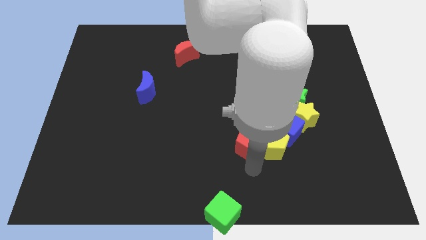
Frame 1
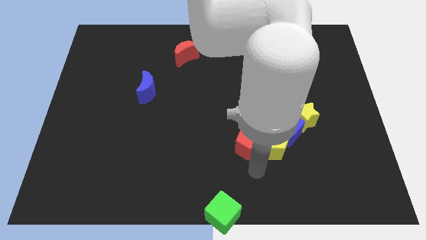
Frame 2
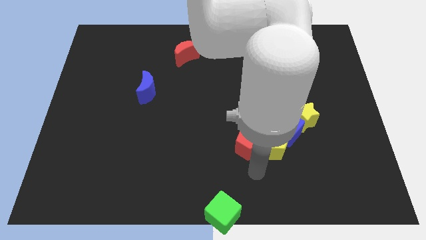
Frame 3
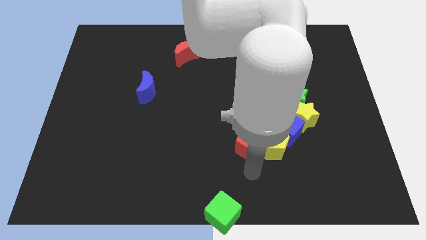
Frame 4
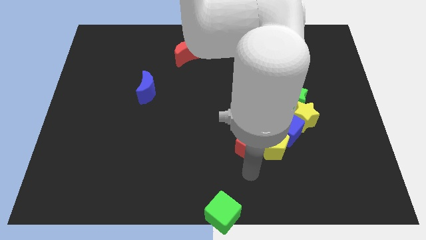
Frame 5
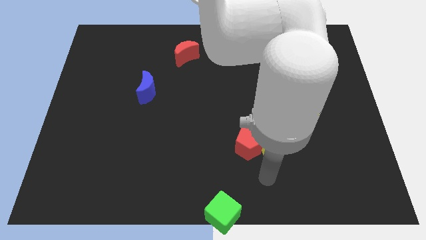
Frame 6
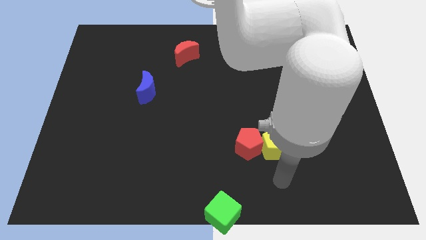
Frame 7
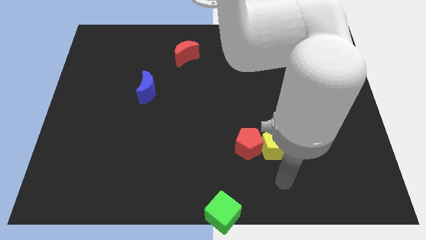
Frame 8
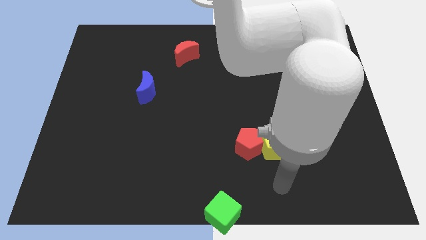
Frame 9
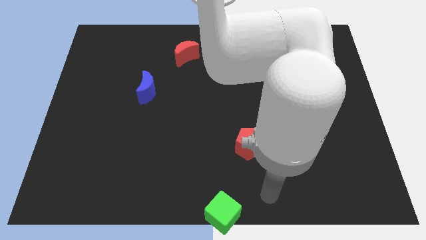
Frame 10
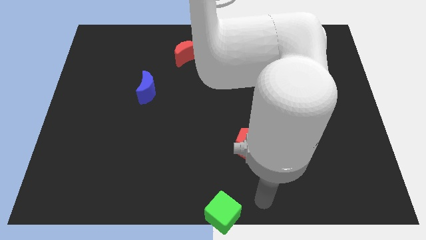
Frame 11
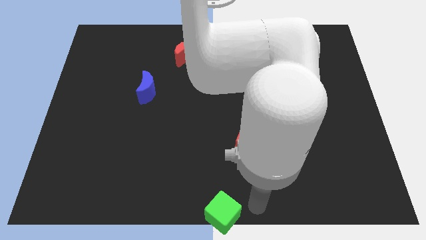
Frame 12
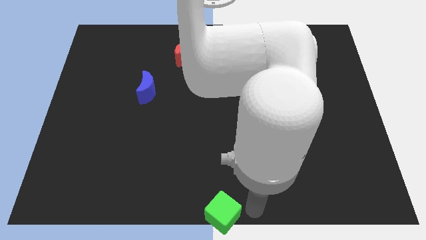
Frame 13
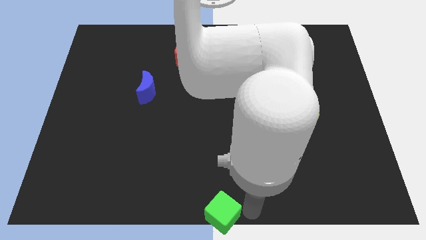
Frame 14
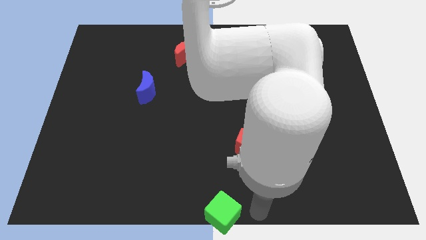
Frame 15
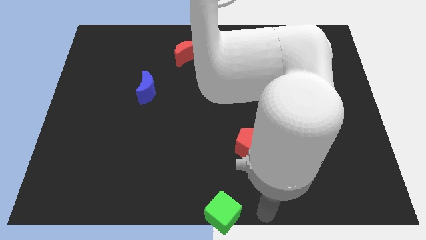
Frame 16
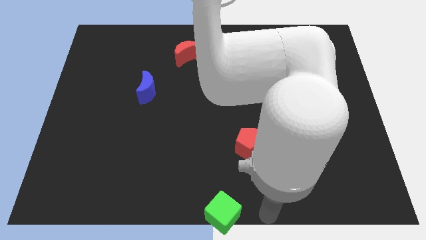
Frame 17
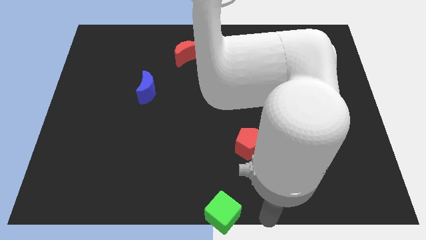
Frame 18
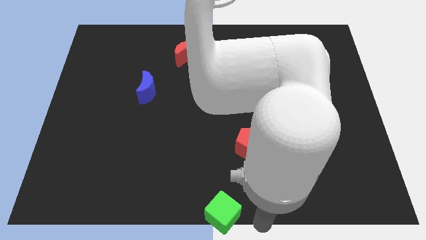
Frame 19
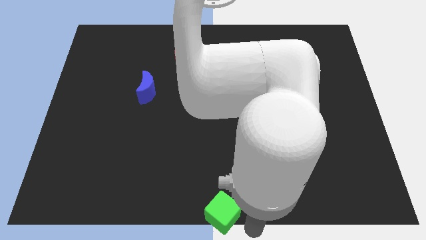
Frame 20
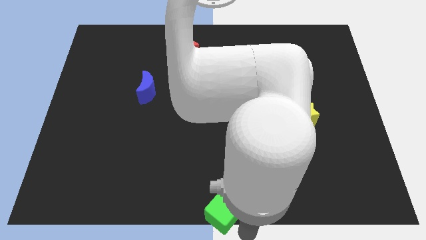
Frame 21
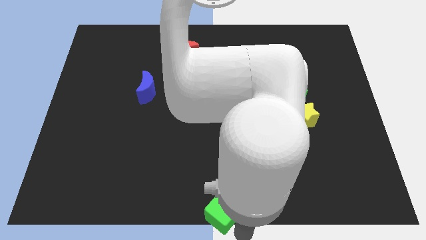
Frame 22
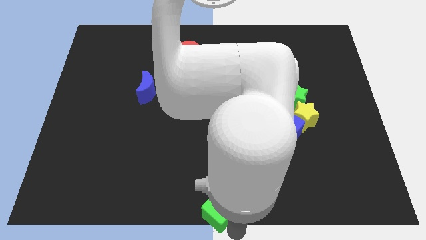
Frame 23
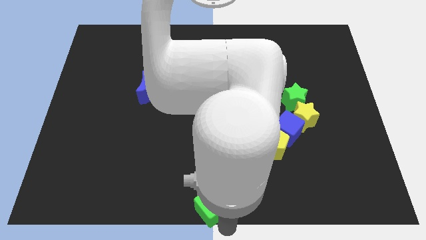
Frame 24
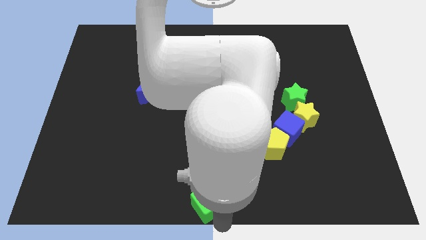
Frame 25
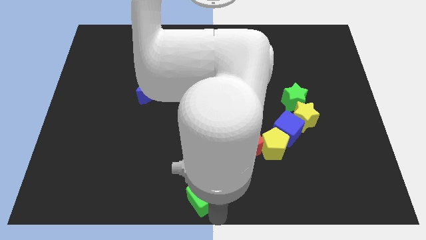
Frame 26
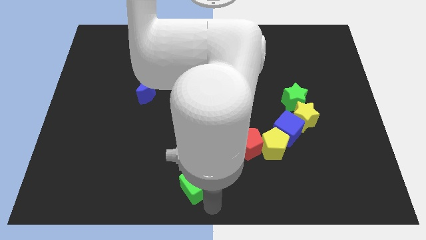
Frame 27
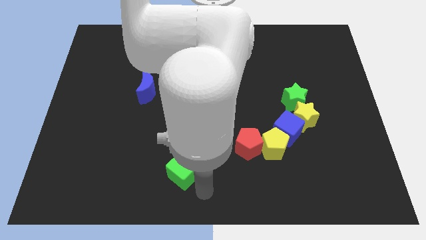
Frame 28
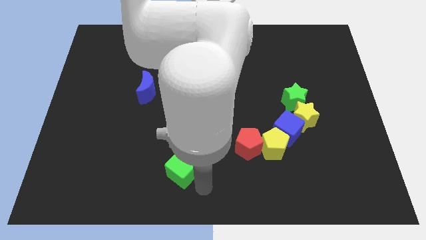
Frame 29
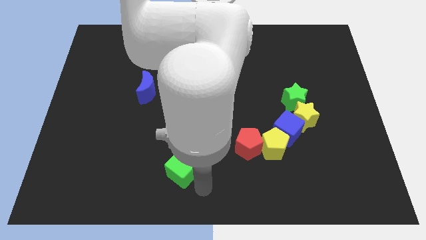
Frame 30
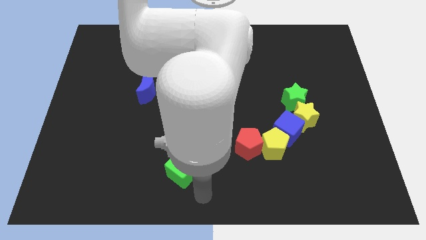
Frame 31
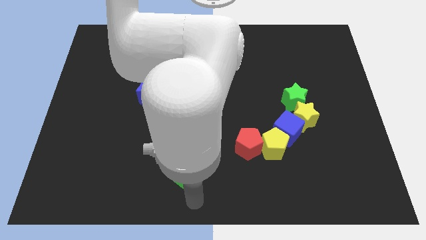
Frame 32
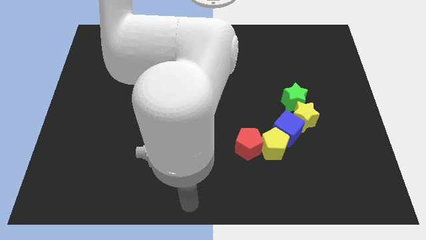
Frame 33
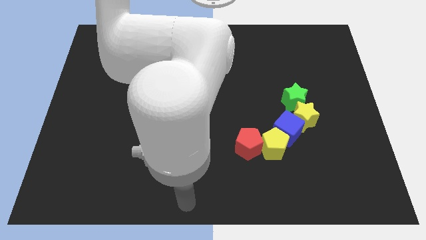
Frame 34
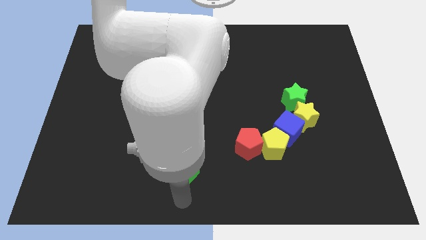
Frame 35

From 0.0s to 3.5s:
push the green cube towards the left side of the board

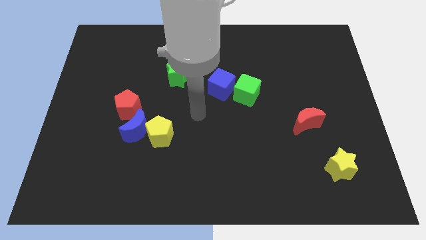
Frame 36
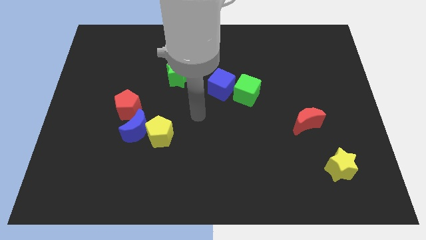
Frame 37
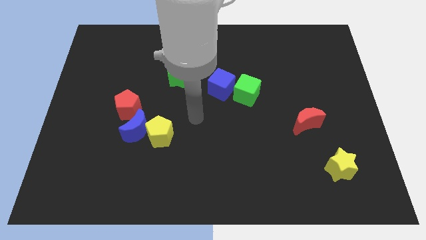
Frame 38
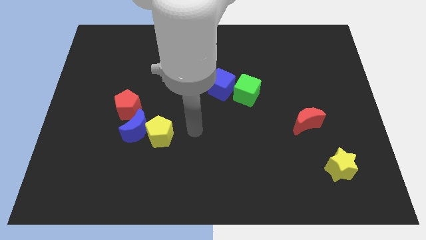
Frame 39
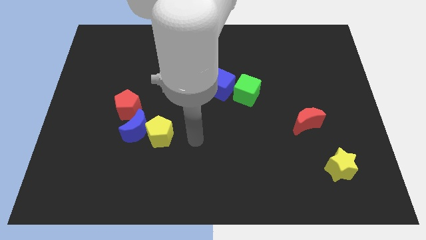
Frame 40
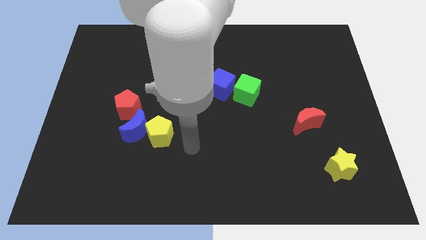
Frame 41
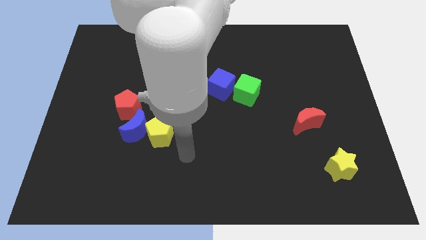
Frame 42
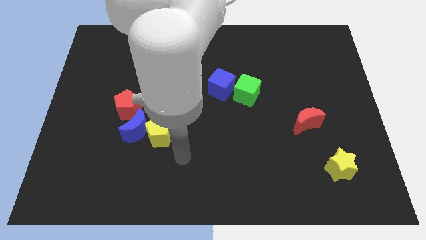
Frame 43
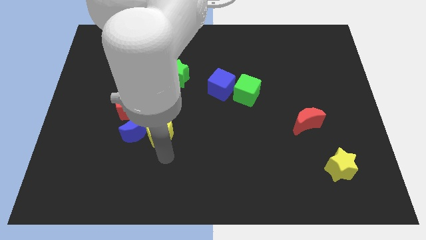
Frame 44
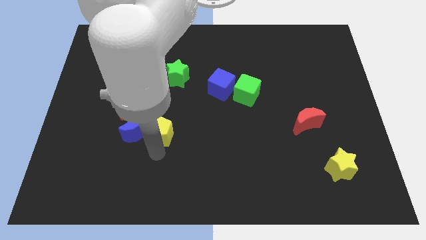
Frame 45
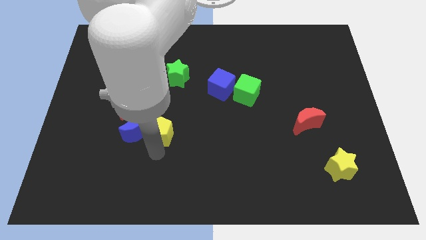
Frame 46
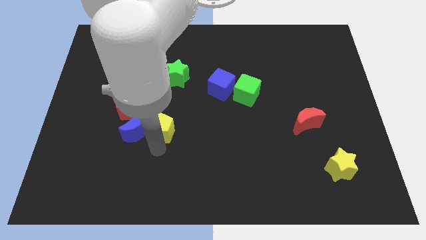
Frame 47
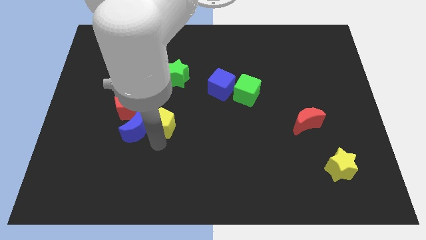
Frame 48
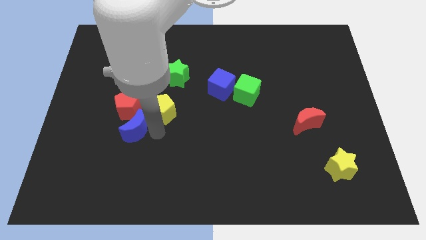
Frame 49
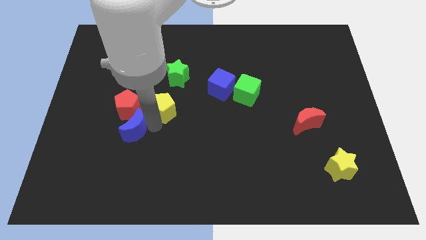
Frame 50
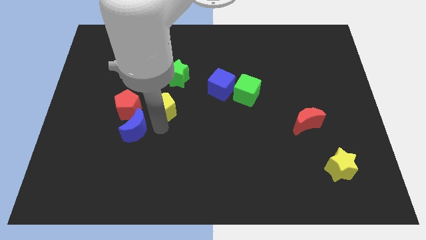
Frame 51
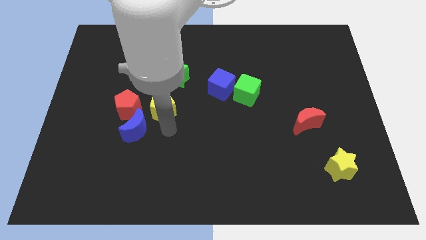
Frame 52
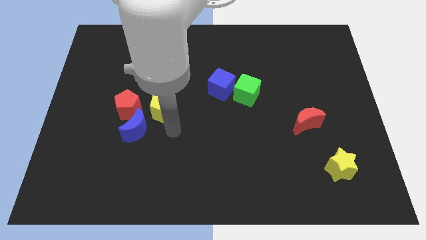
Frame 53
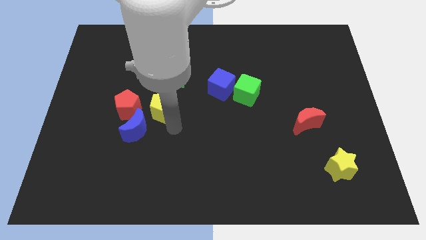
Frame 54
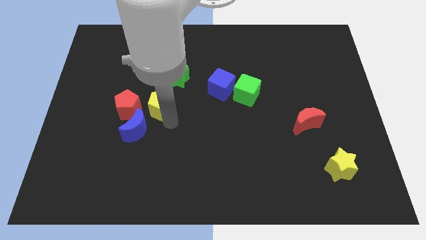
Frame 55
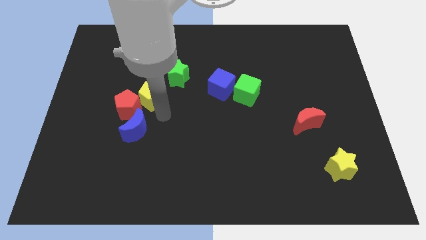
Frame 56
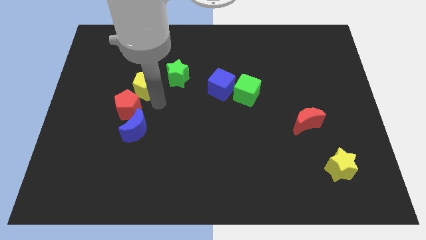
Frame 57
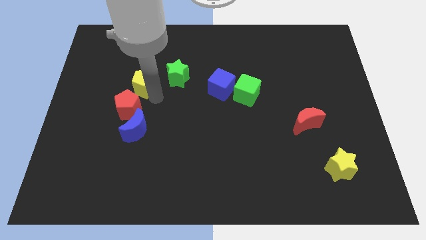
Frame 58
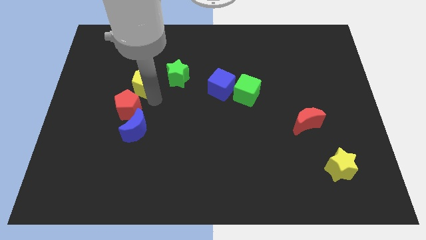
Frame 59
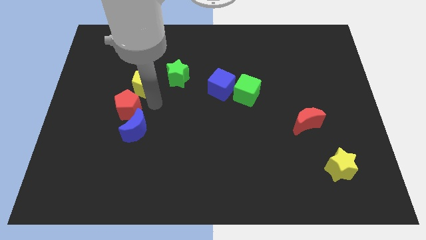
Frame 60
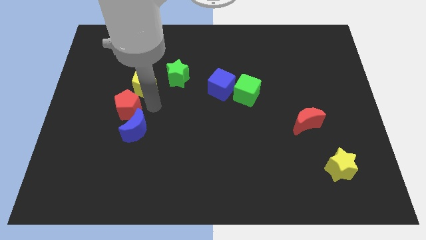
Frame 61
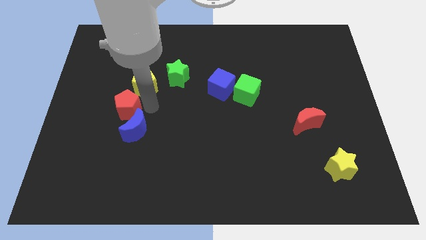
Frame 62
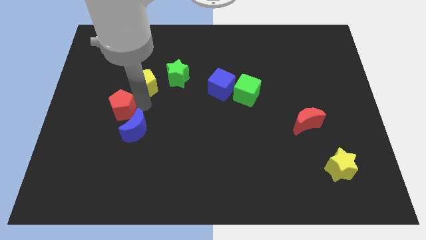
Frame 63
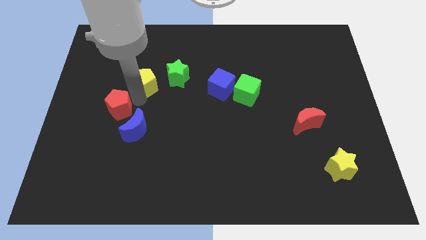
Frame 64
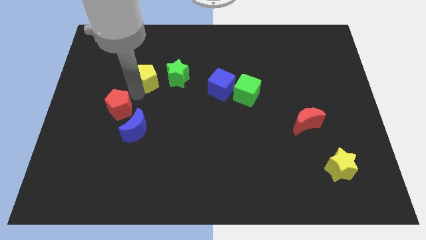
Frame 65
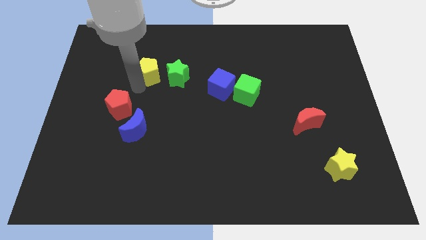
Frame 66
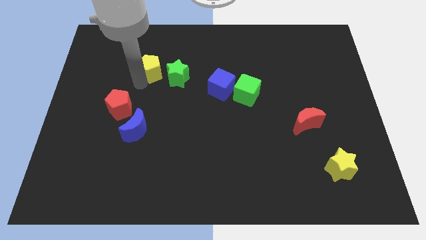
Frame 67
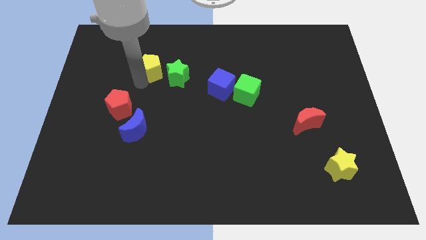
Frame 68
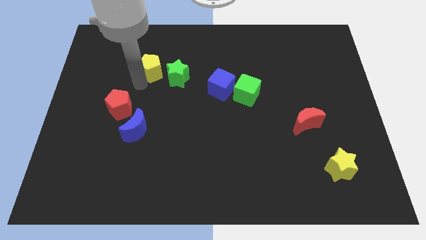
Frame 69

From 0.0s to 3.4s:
move the yellow pentagon to the left of green star

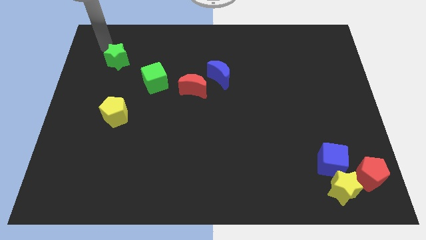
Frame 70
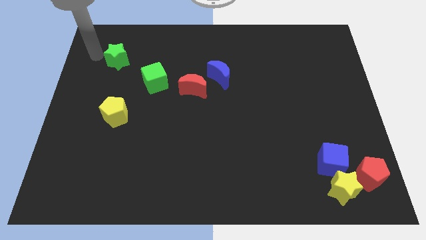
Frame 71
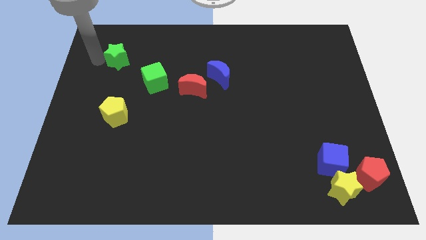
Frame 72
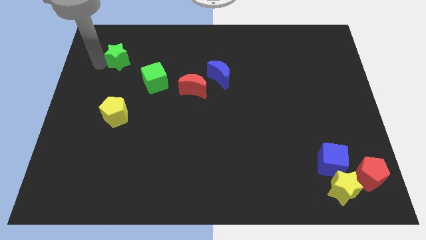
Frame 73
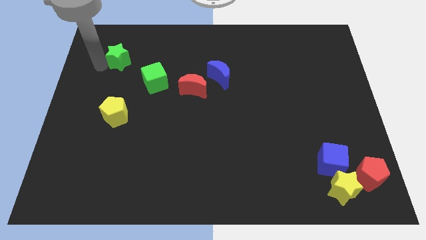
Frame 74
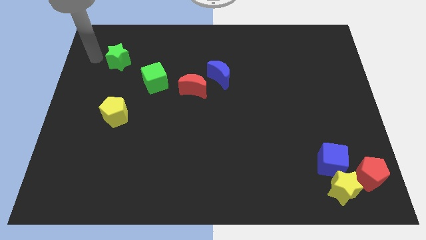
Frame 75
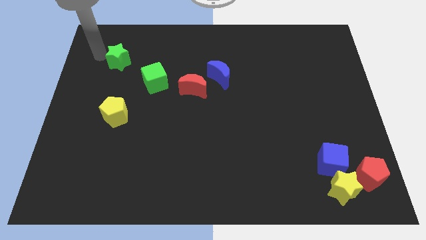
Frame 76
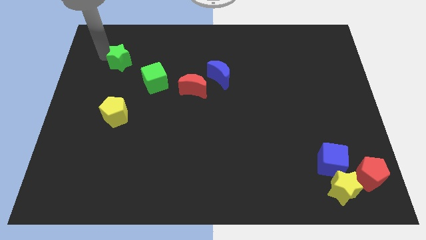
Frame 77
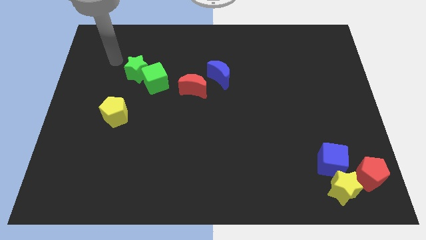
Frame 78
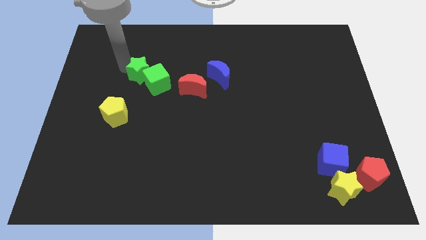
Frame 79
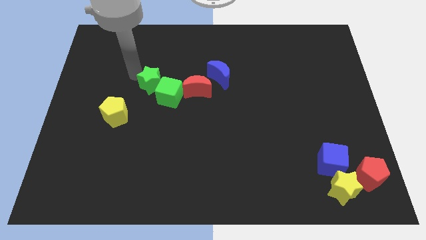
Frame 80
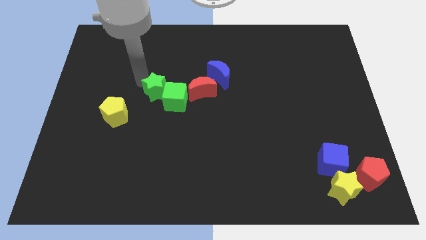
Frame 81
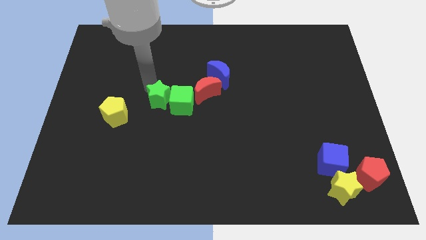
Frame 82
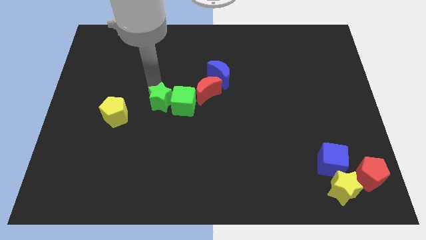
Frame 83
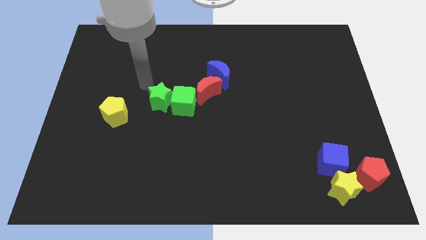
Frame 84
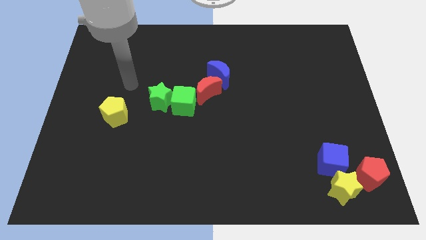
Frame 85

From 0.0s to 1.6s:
put the green star into the green cube

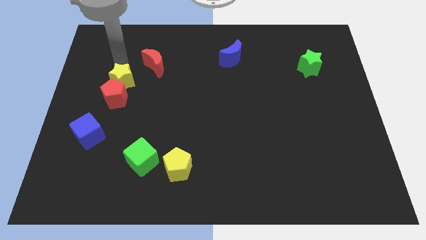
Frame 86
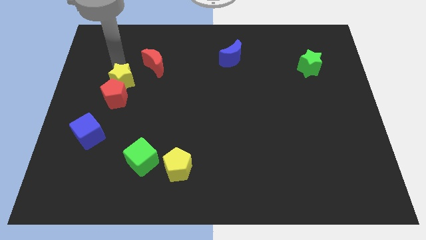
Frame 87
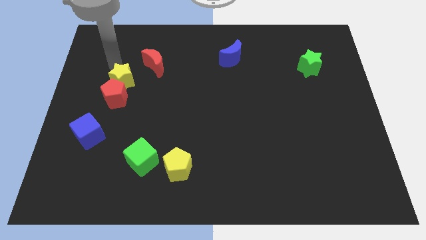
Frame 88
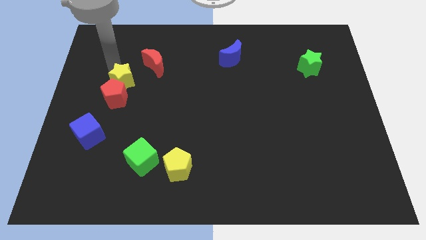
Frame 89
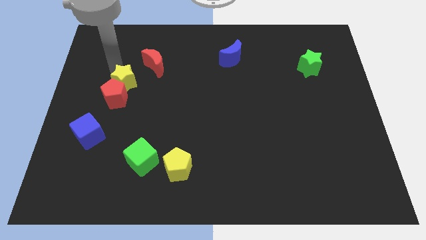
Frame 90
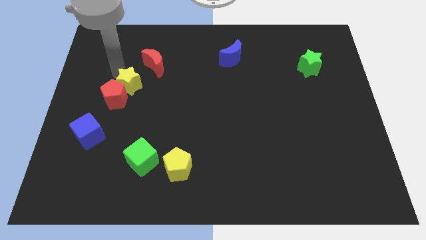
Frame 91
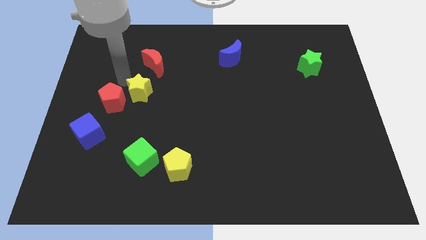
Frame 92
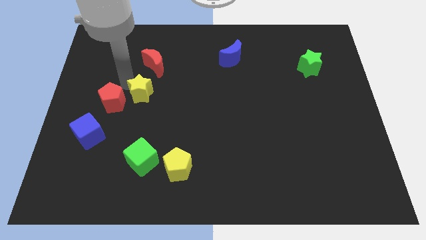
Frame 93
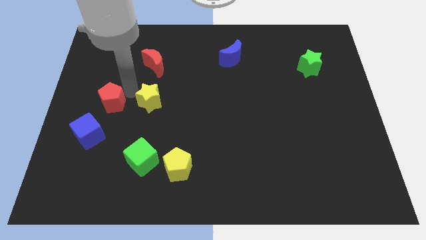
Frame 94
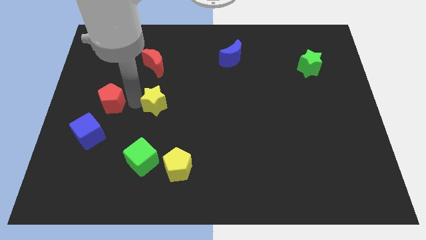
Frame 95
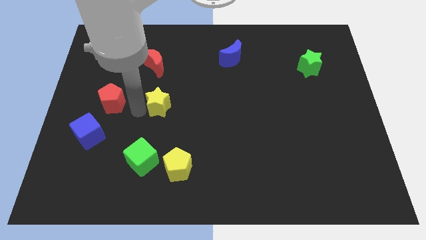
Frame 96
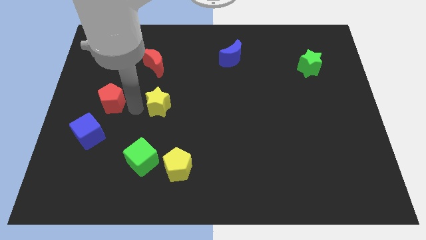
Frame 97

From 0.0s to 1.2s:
move yellow star below the red moon
